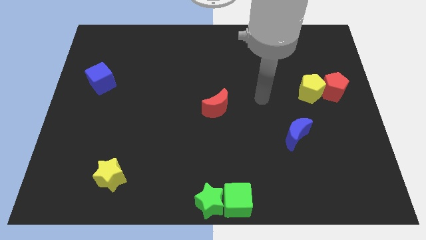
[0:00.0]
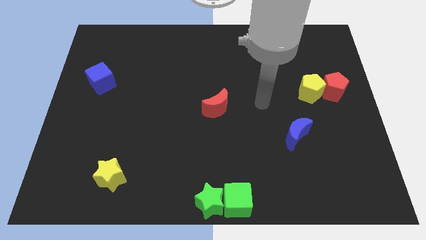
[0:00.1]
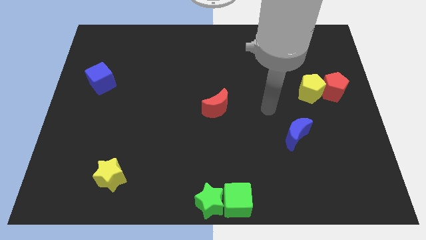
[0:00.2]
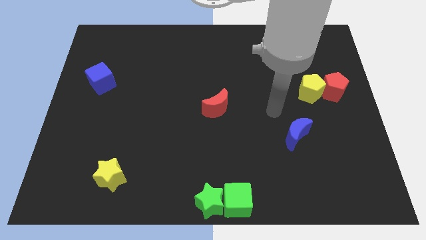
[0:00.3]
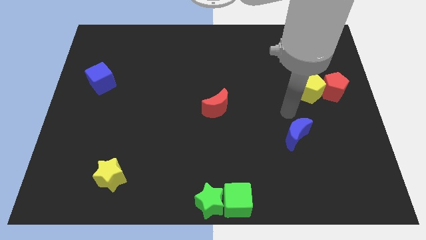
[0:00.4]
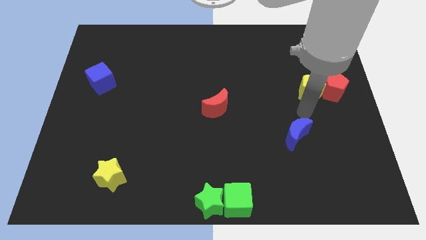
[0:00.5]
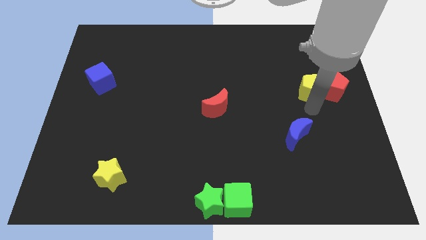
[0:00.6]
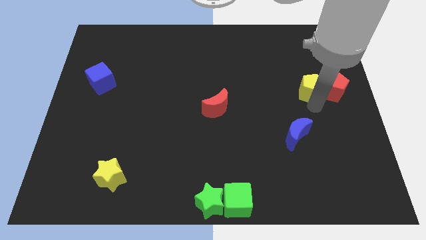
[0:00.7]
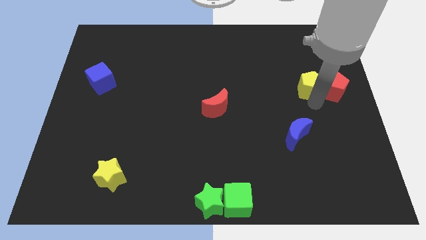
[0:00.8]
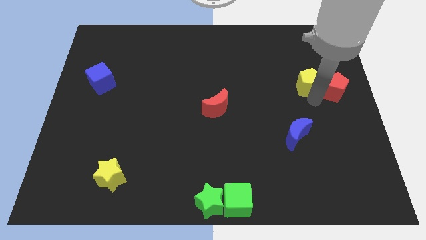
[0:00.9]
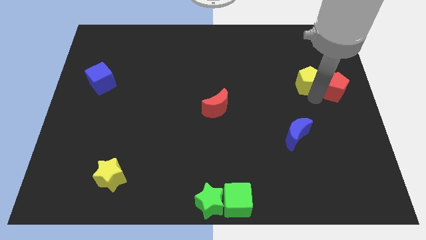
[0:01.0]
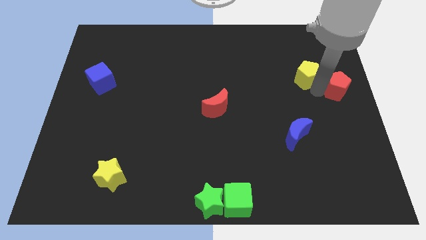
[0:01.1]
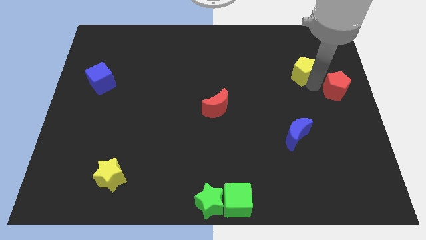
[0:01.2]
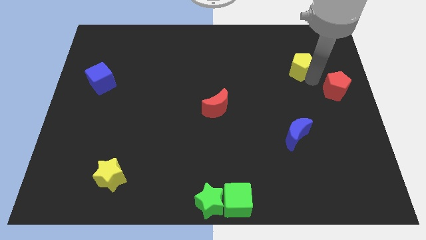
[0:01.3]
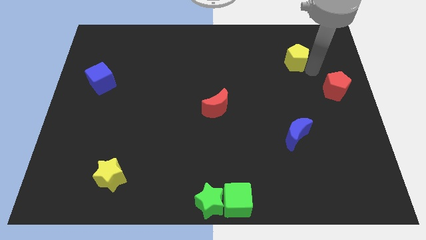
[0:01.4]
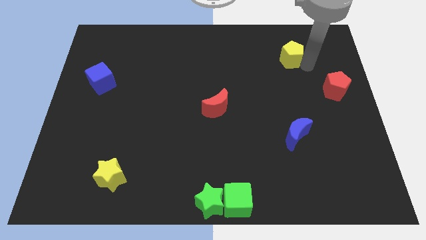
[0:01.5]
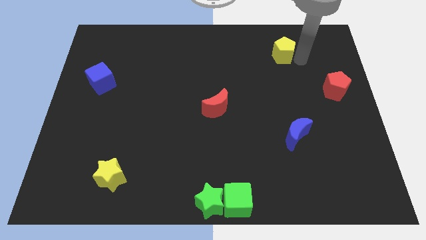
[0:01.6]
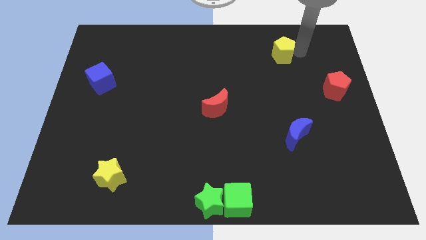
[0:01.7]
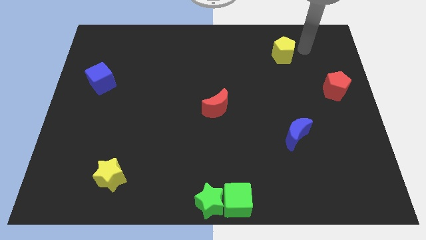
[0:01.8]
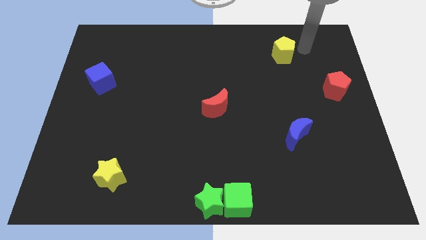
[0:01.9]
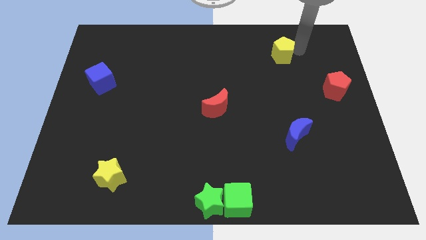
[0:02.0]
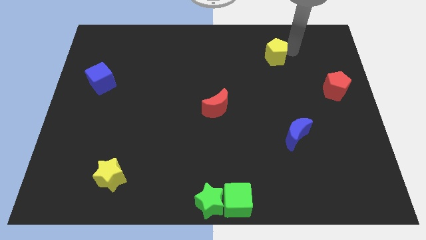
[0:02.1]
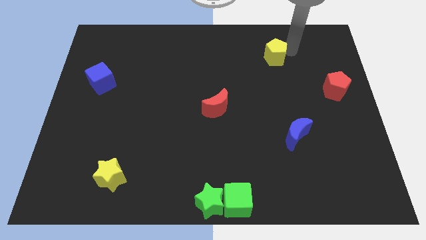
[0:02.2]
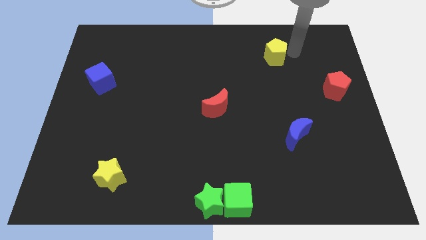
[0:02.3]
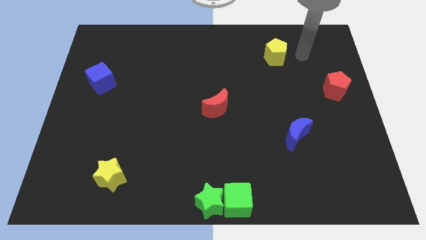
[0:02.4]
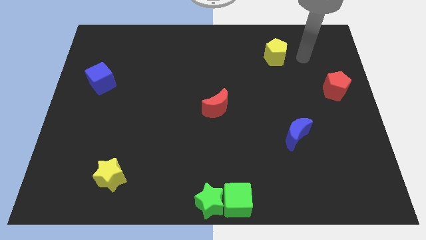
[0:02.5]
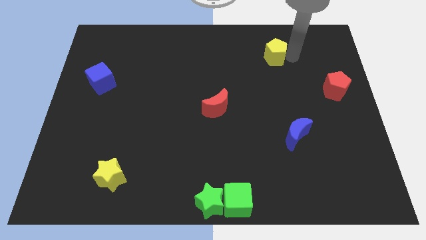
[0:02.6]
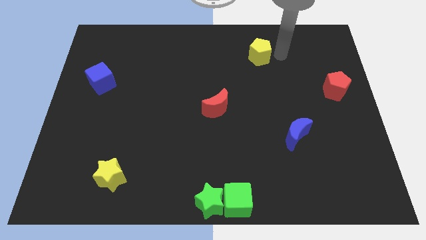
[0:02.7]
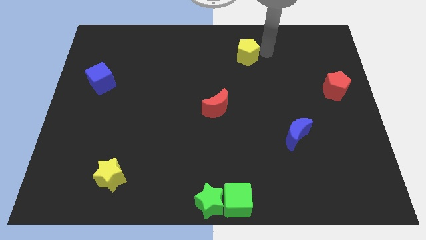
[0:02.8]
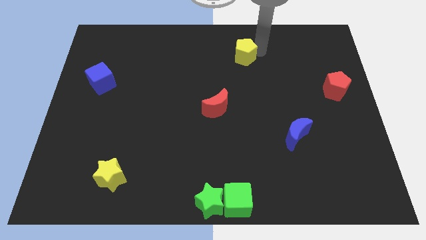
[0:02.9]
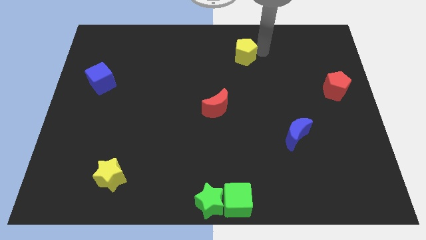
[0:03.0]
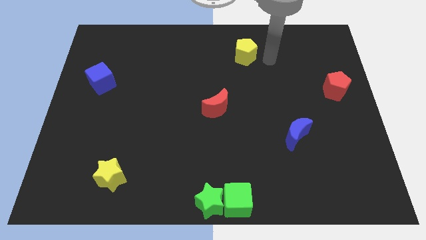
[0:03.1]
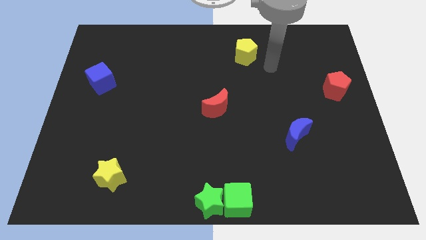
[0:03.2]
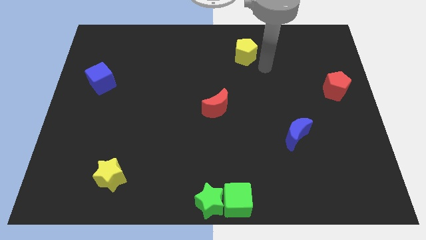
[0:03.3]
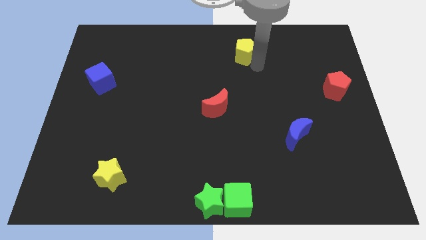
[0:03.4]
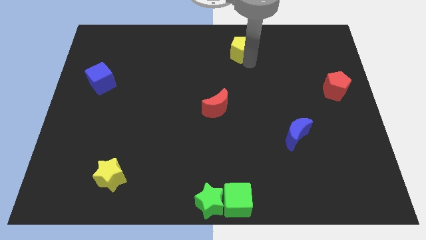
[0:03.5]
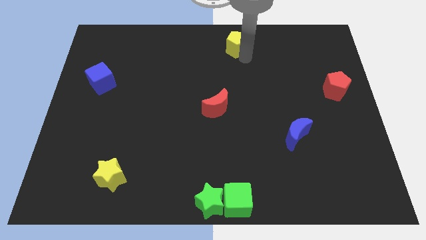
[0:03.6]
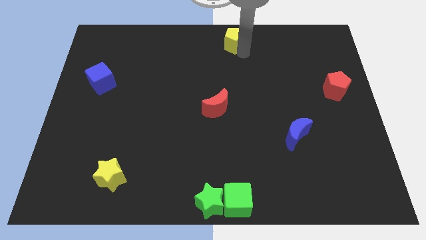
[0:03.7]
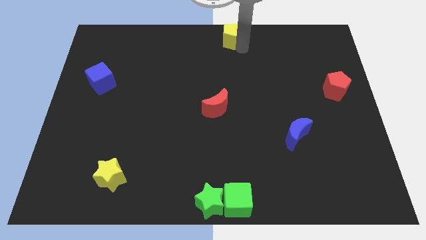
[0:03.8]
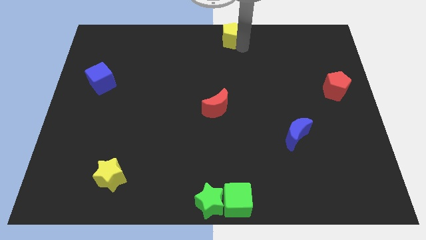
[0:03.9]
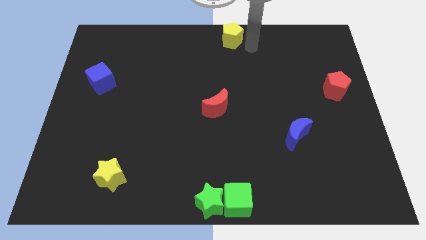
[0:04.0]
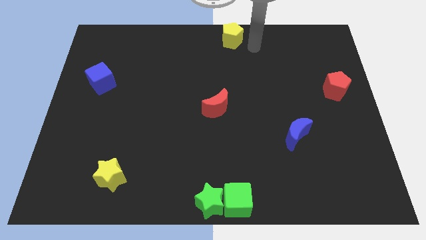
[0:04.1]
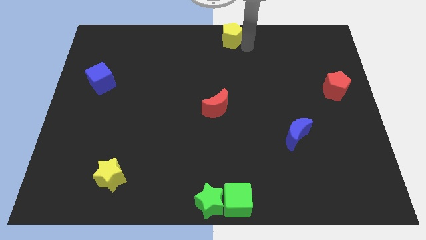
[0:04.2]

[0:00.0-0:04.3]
move the yellow pentagon to the top center

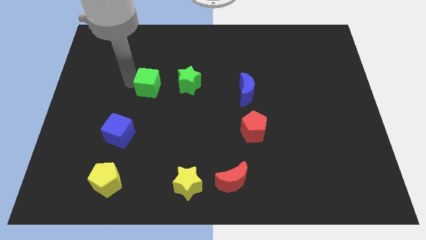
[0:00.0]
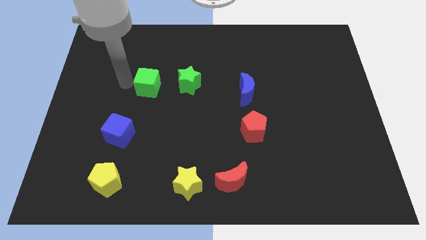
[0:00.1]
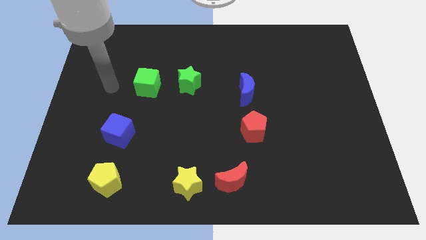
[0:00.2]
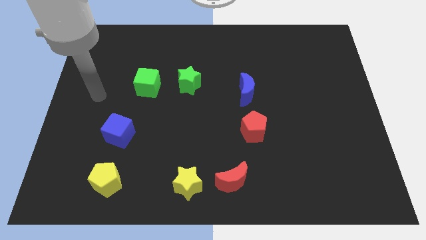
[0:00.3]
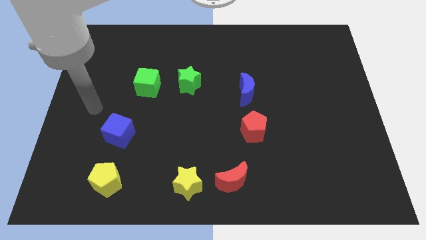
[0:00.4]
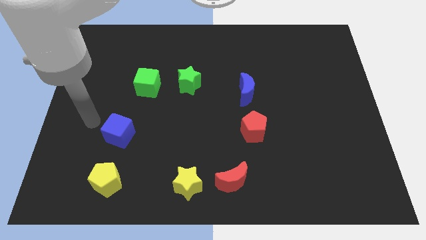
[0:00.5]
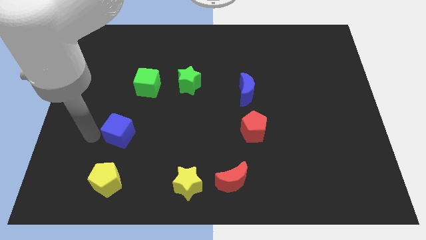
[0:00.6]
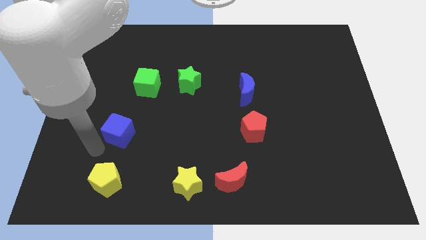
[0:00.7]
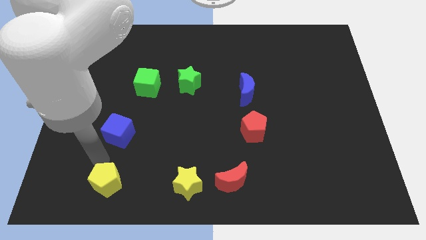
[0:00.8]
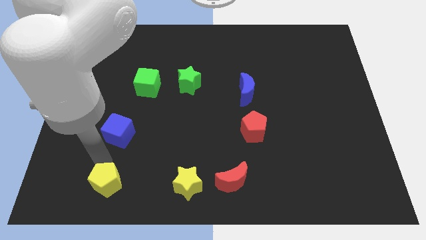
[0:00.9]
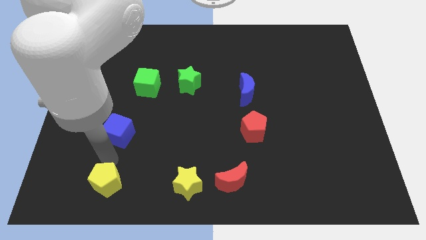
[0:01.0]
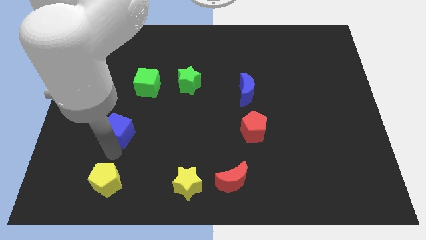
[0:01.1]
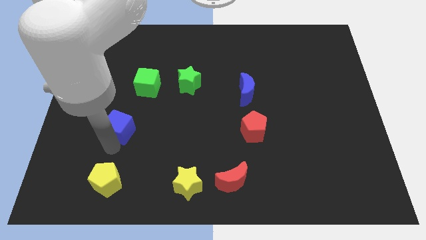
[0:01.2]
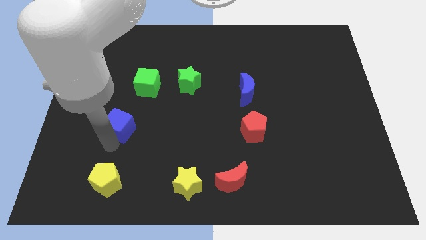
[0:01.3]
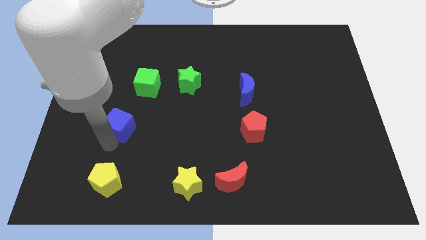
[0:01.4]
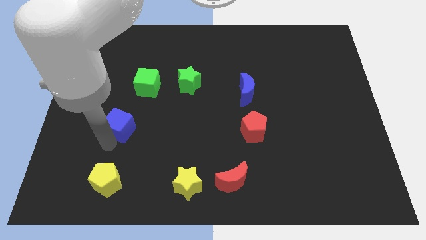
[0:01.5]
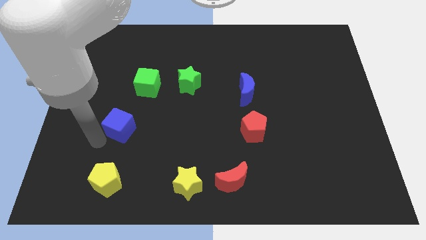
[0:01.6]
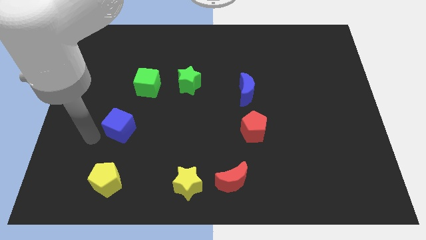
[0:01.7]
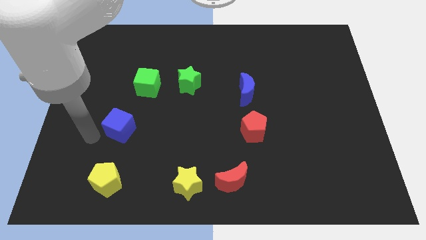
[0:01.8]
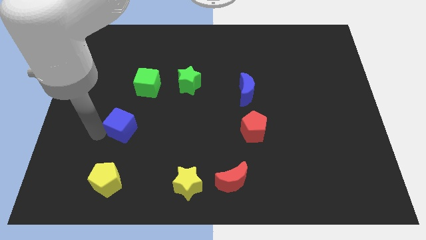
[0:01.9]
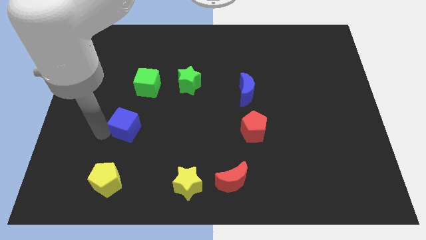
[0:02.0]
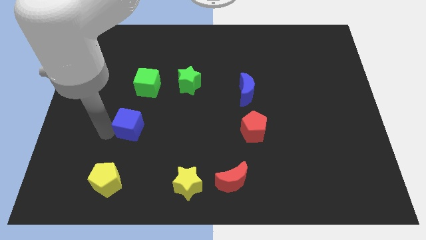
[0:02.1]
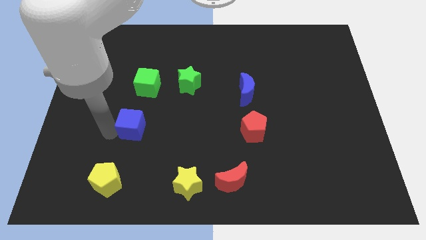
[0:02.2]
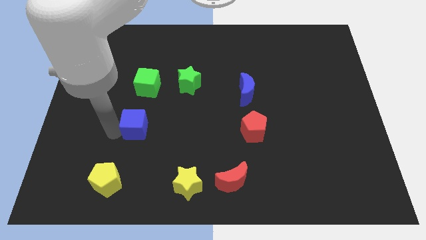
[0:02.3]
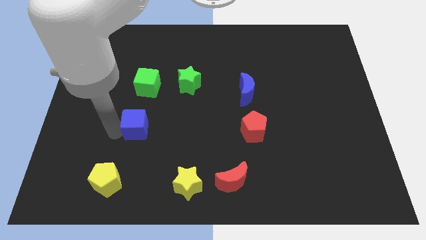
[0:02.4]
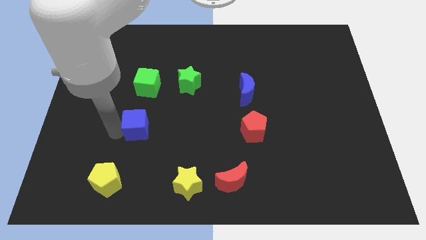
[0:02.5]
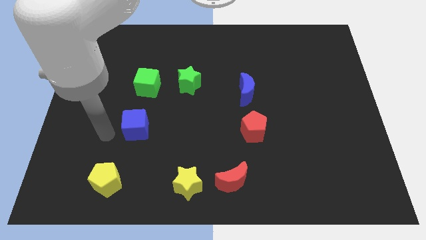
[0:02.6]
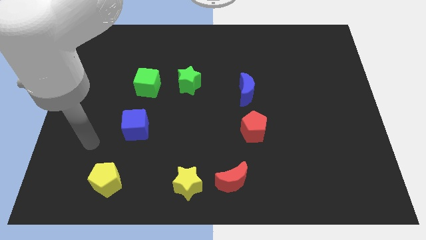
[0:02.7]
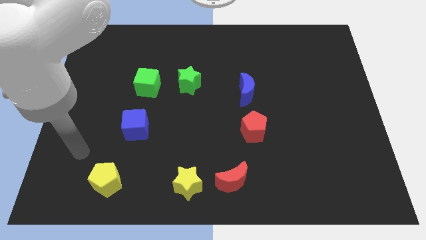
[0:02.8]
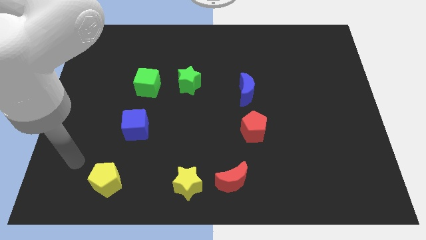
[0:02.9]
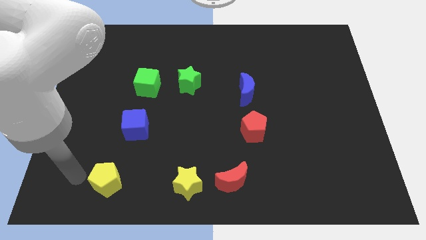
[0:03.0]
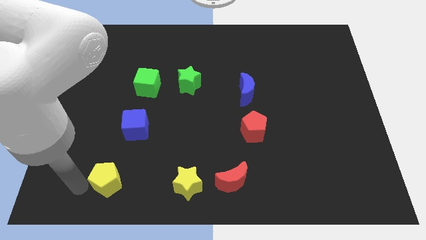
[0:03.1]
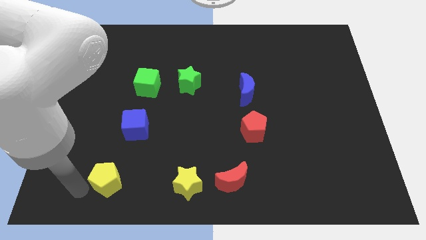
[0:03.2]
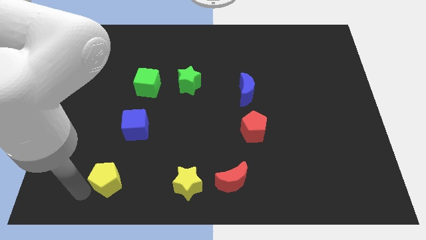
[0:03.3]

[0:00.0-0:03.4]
place blue cube to the bottom of green cube

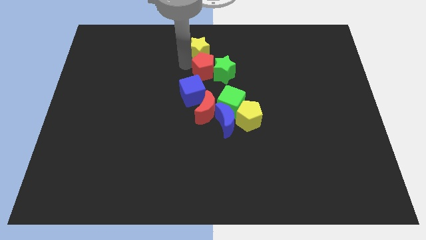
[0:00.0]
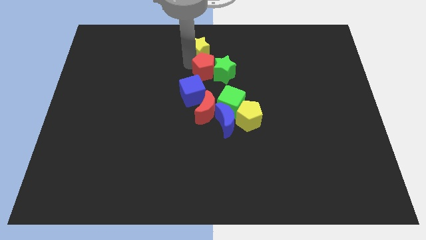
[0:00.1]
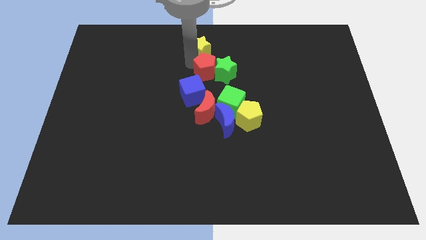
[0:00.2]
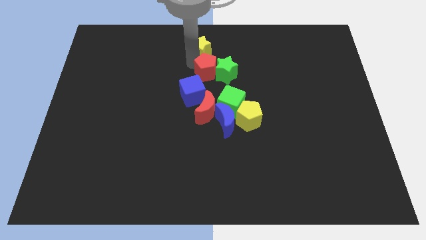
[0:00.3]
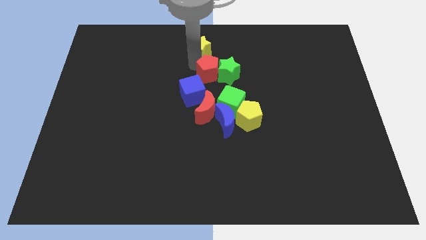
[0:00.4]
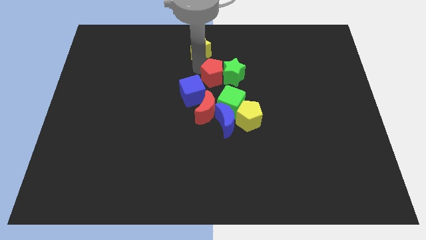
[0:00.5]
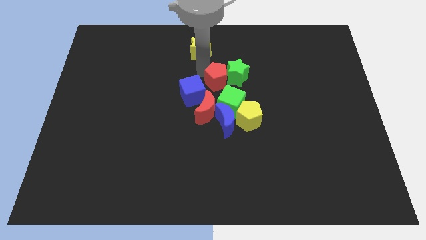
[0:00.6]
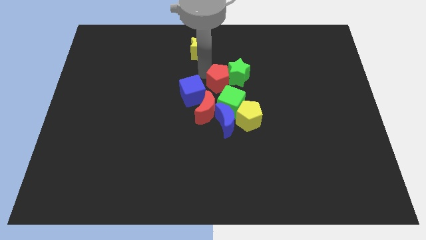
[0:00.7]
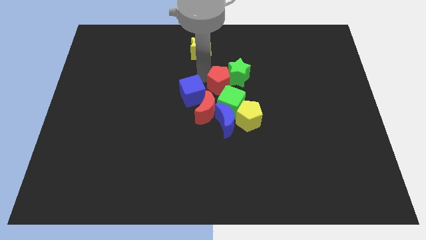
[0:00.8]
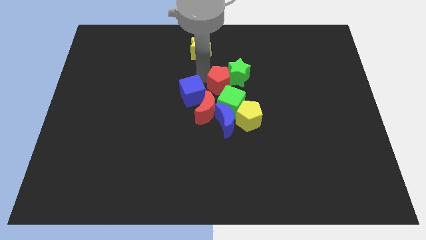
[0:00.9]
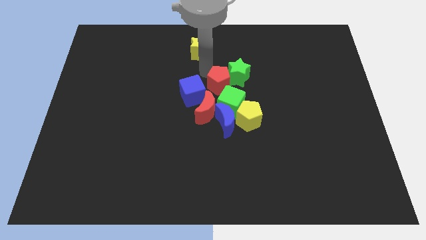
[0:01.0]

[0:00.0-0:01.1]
place the red pentagon to the left to the green star

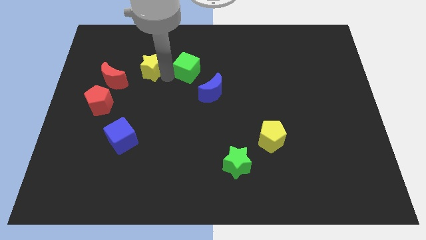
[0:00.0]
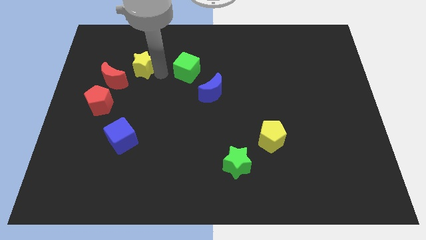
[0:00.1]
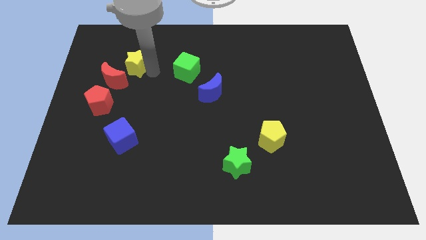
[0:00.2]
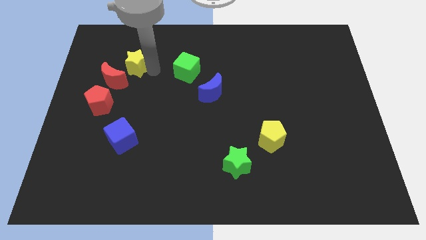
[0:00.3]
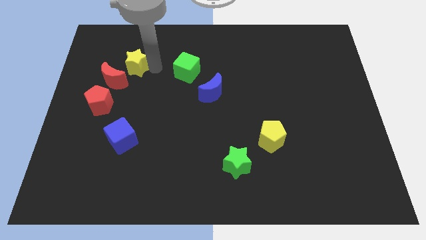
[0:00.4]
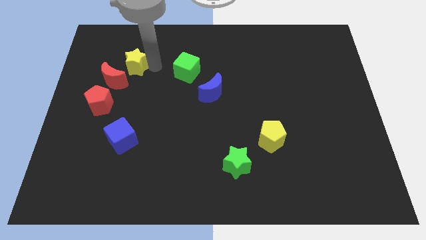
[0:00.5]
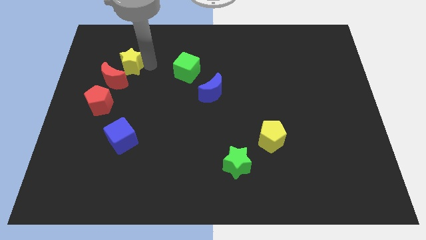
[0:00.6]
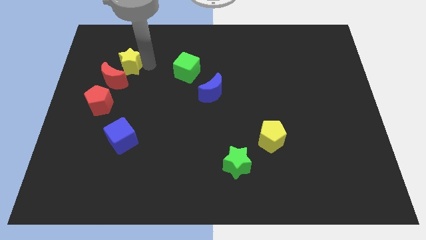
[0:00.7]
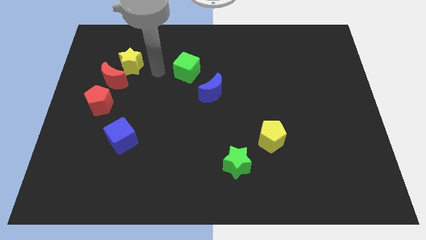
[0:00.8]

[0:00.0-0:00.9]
place the yellow star at the top of red crescent
